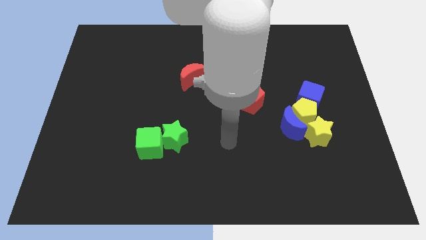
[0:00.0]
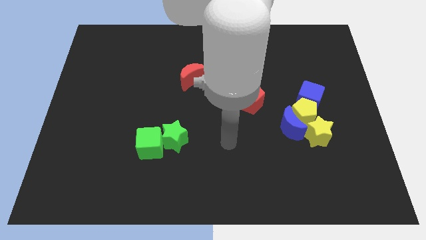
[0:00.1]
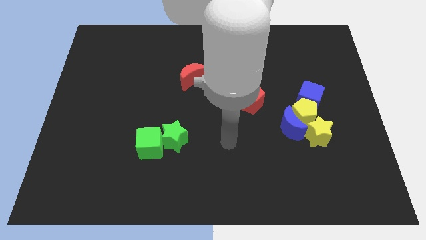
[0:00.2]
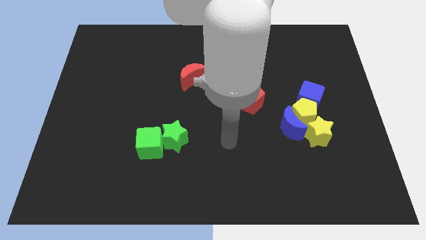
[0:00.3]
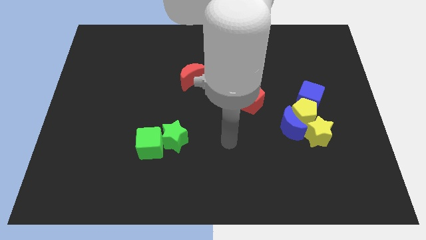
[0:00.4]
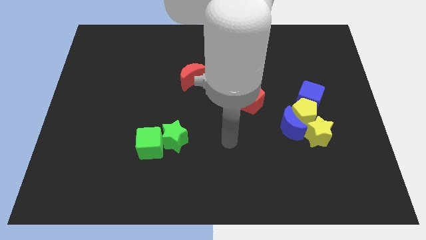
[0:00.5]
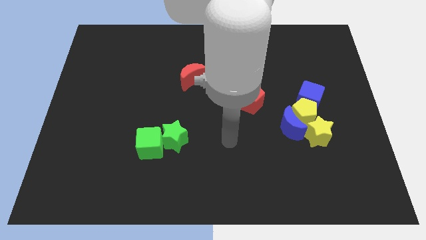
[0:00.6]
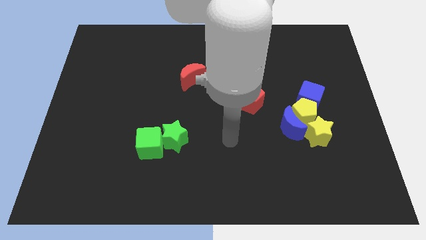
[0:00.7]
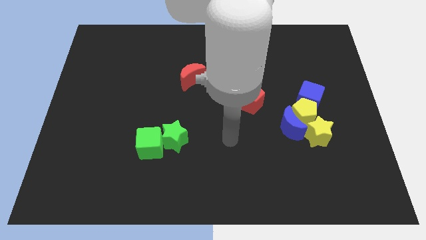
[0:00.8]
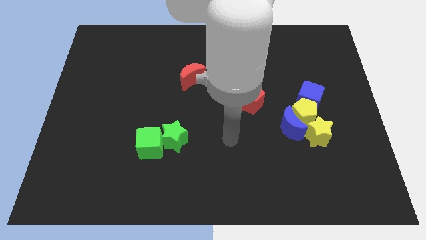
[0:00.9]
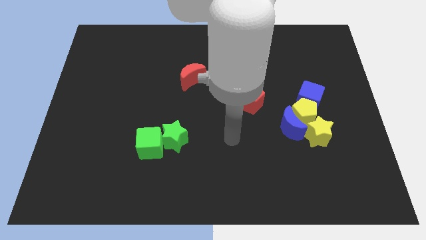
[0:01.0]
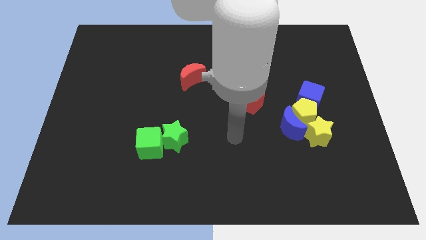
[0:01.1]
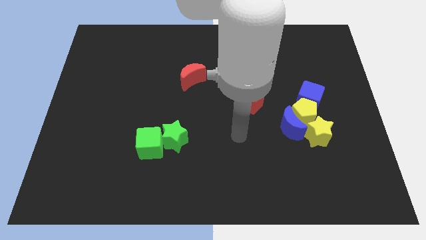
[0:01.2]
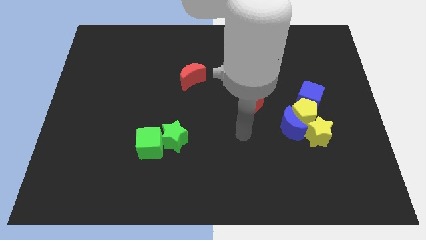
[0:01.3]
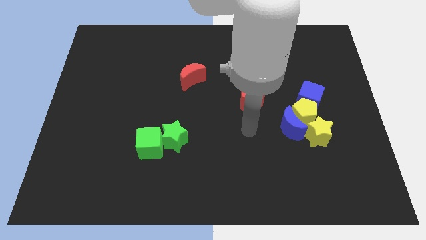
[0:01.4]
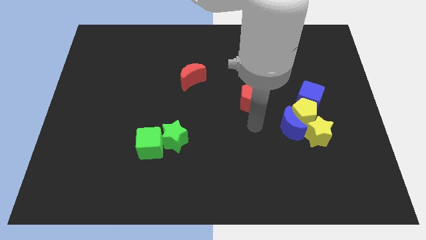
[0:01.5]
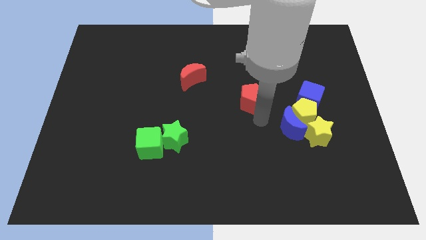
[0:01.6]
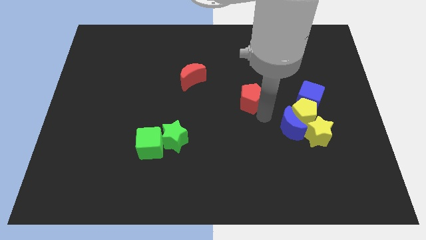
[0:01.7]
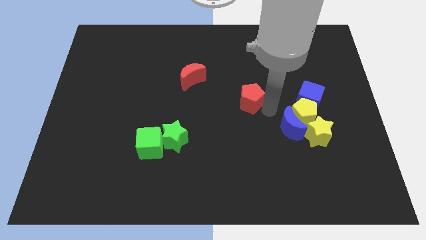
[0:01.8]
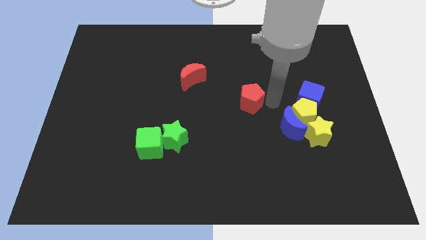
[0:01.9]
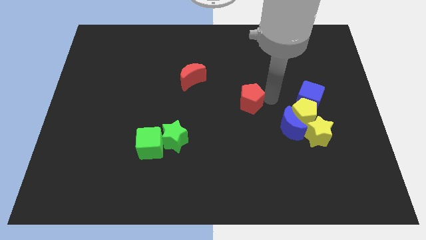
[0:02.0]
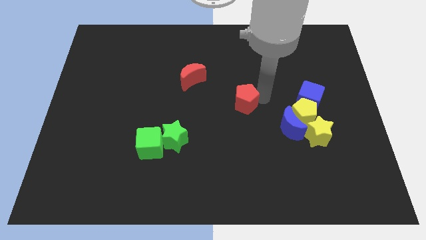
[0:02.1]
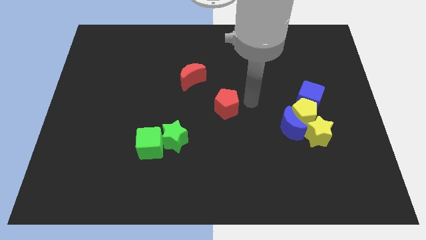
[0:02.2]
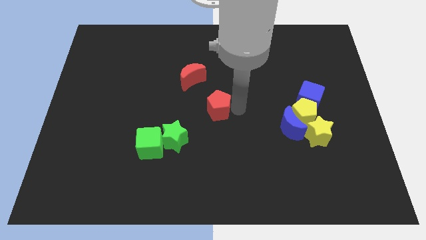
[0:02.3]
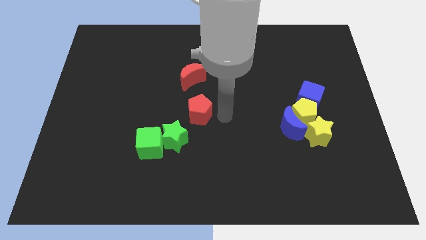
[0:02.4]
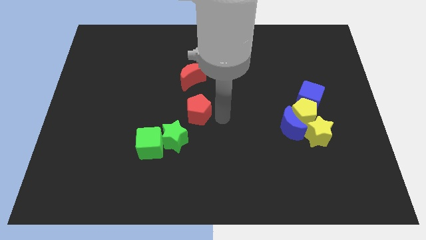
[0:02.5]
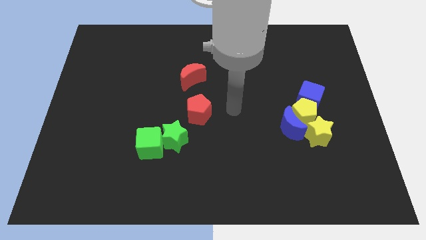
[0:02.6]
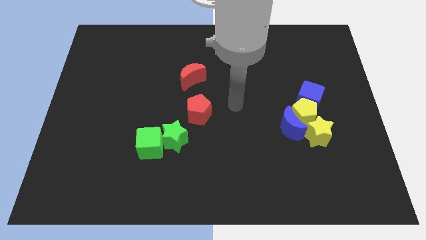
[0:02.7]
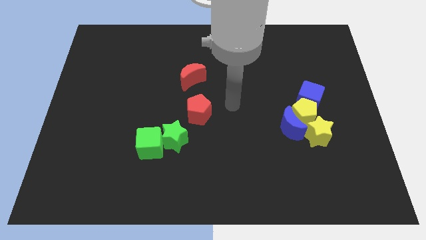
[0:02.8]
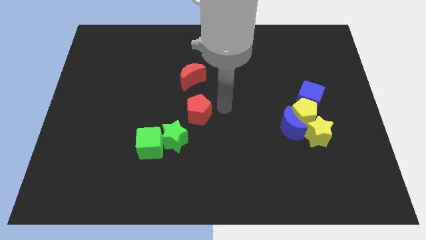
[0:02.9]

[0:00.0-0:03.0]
move the red pentagon below the red moon

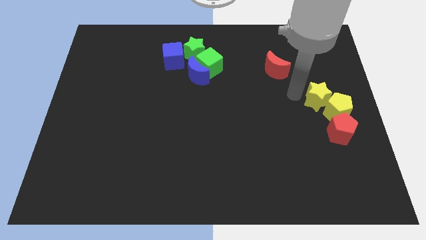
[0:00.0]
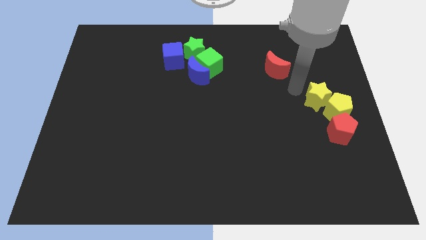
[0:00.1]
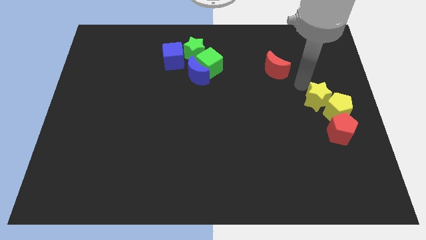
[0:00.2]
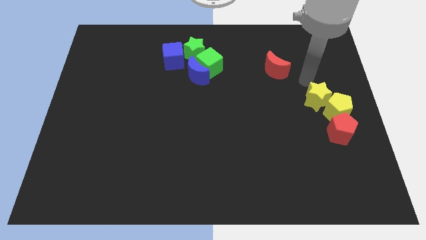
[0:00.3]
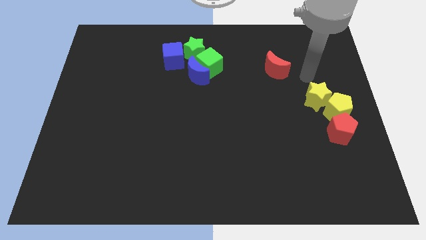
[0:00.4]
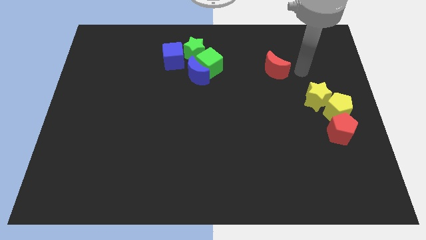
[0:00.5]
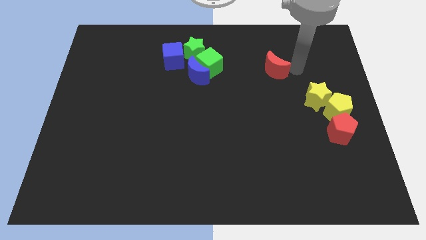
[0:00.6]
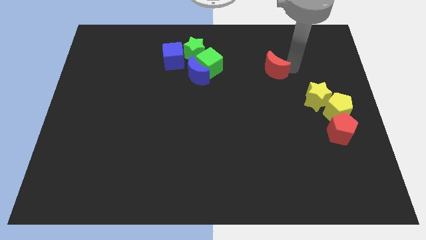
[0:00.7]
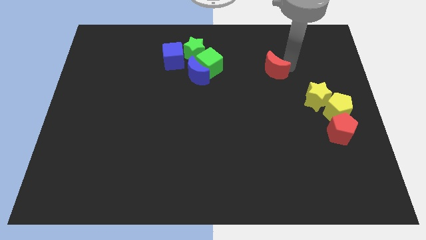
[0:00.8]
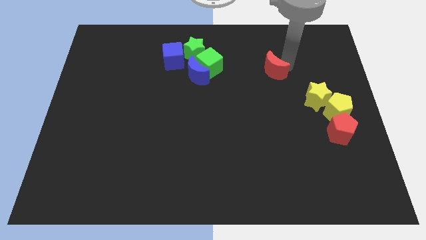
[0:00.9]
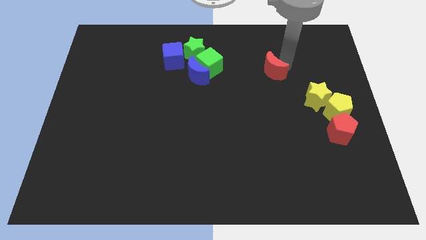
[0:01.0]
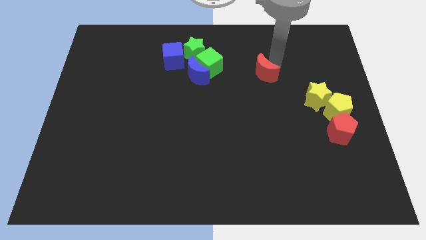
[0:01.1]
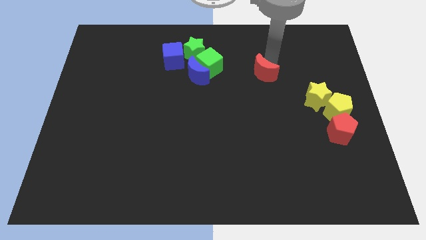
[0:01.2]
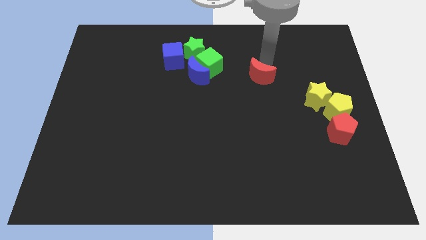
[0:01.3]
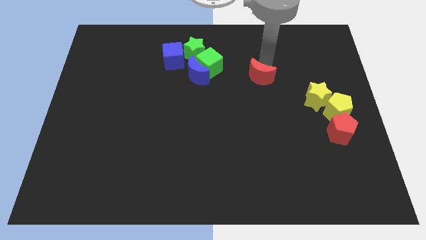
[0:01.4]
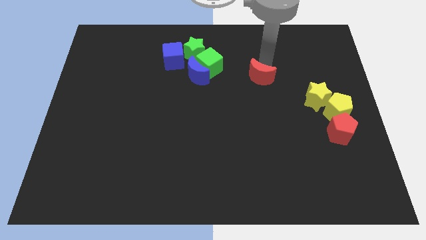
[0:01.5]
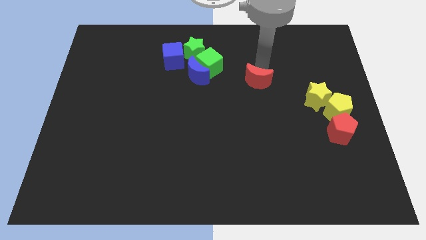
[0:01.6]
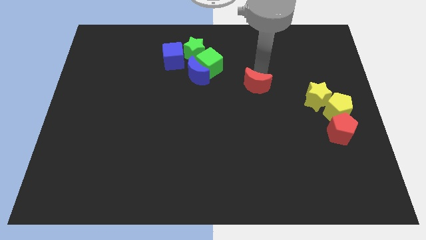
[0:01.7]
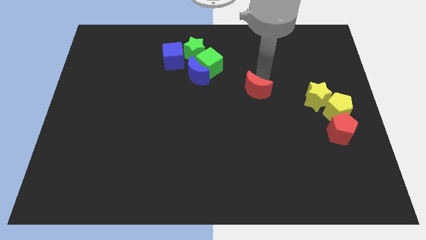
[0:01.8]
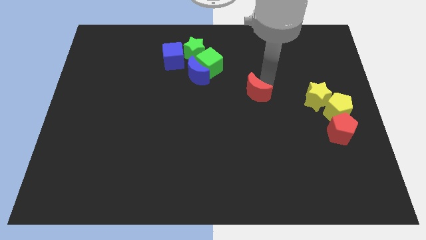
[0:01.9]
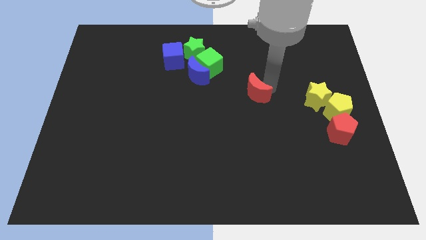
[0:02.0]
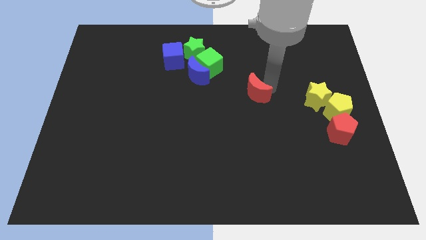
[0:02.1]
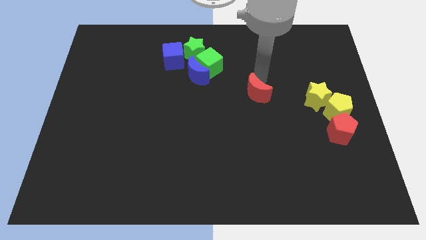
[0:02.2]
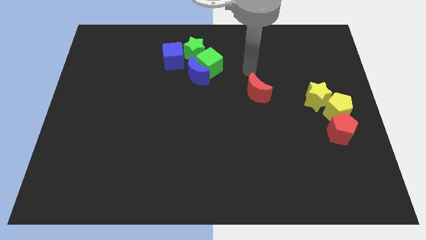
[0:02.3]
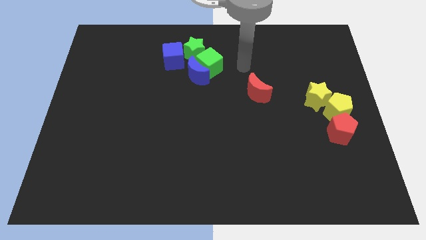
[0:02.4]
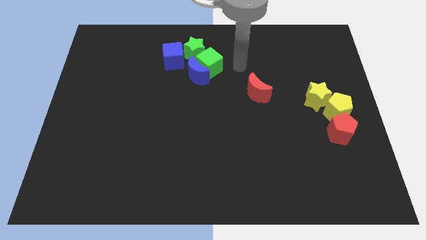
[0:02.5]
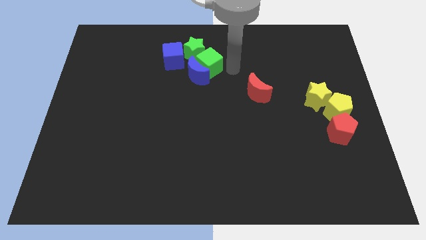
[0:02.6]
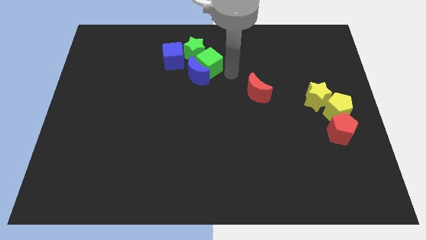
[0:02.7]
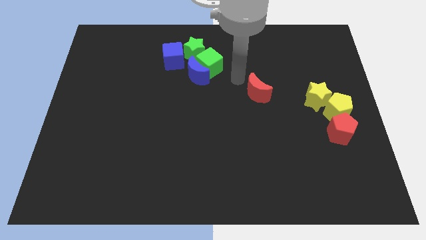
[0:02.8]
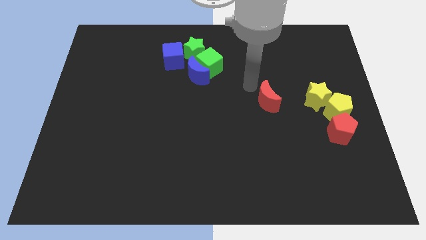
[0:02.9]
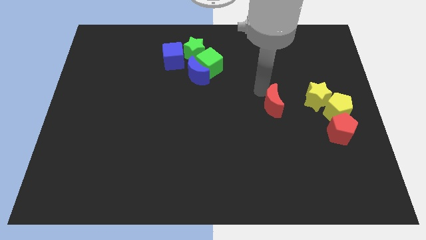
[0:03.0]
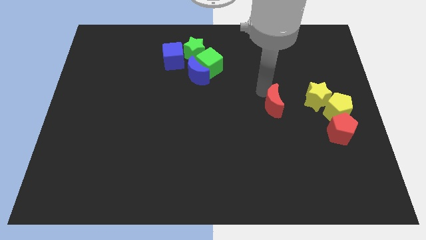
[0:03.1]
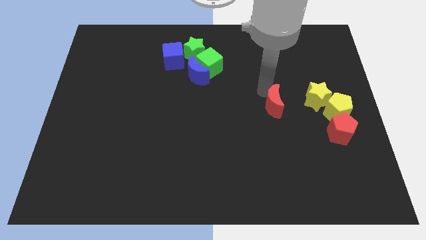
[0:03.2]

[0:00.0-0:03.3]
move the red crescent towards the red pentagon

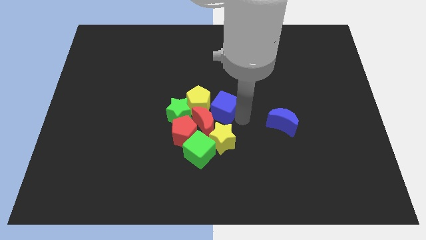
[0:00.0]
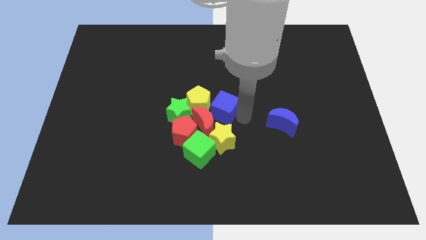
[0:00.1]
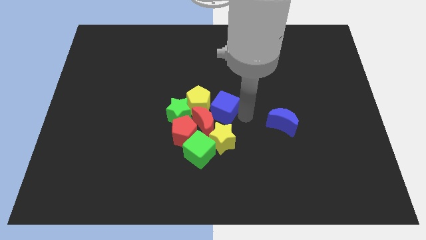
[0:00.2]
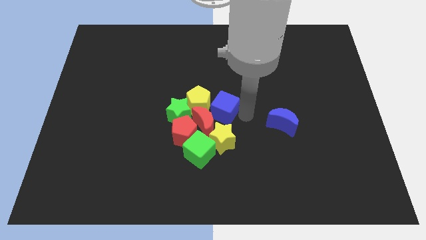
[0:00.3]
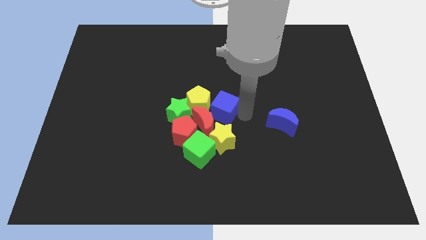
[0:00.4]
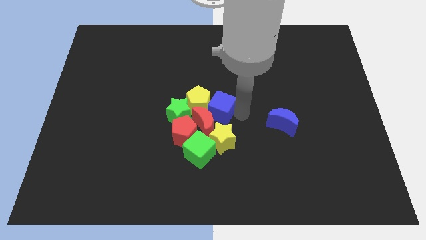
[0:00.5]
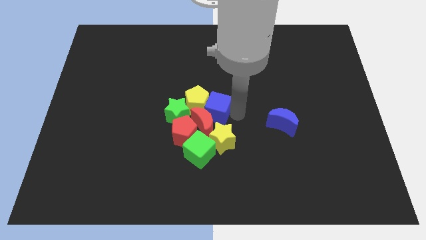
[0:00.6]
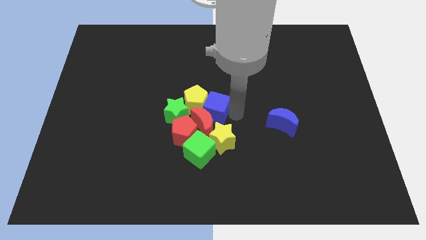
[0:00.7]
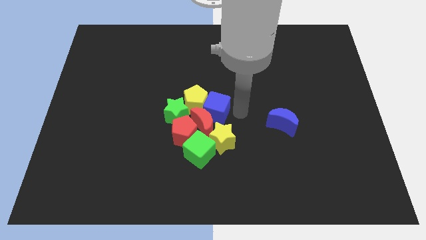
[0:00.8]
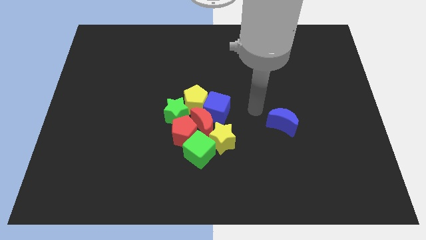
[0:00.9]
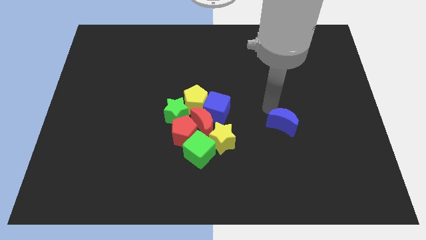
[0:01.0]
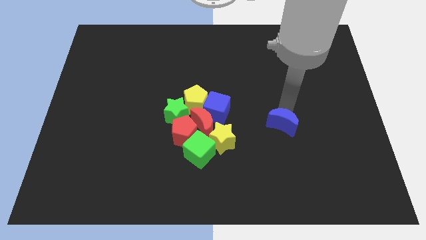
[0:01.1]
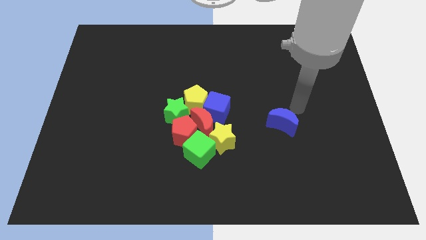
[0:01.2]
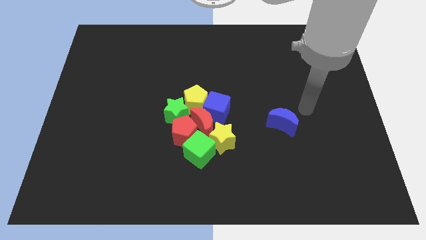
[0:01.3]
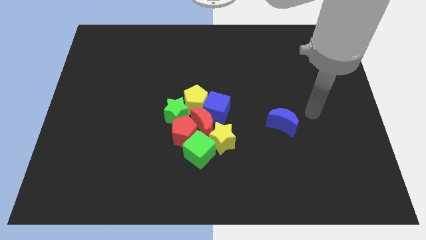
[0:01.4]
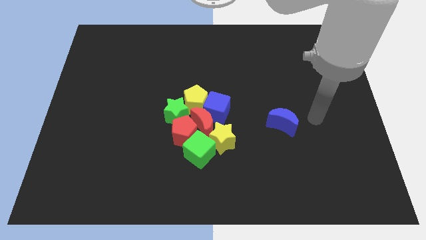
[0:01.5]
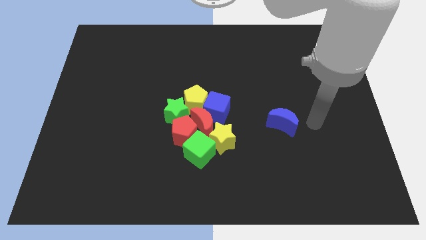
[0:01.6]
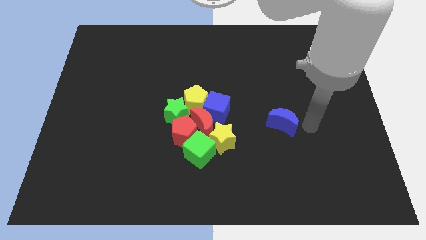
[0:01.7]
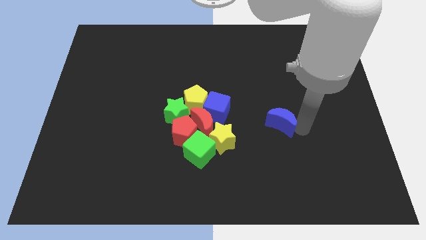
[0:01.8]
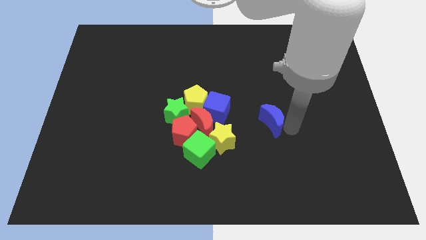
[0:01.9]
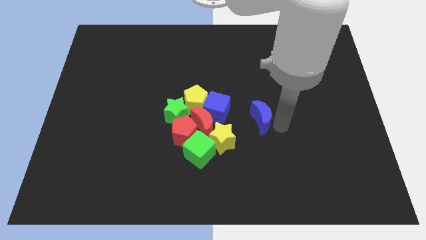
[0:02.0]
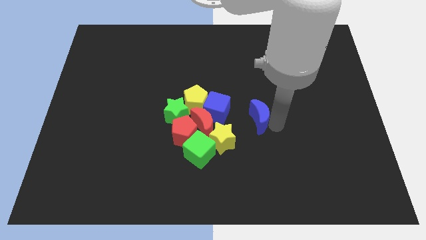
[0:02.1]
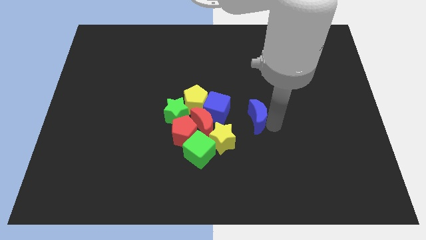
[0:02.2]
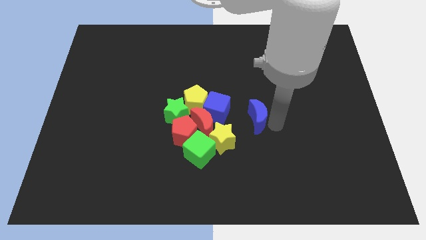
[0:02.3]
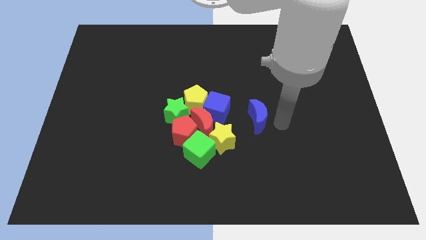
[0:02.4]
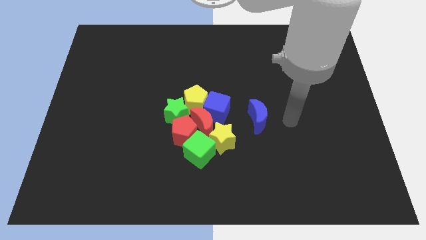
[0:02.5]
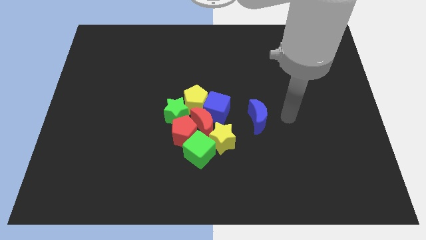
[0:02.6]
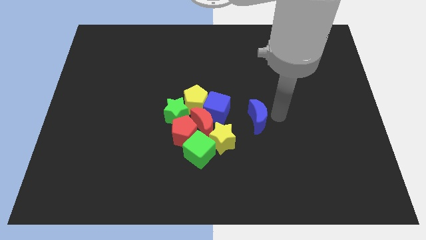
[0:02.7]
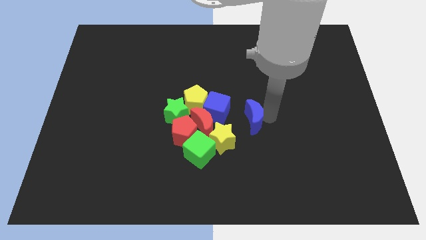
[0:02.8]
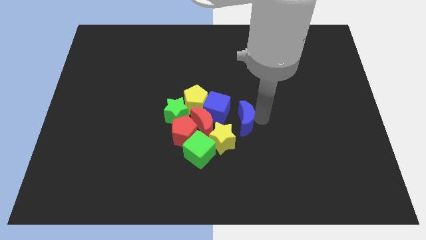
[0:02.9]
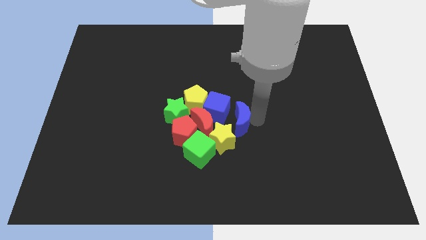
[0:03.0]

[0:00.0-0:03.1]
push the blue present close to the blue cube and yellow star
